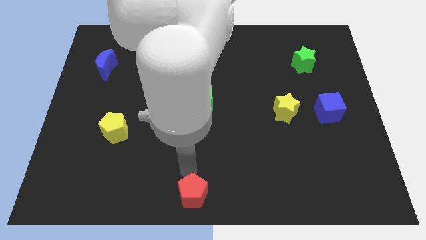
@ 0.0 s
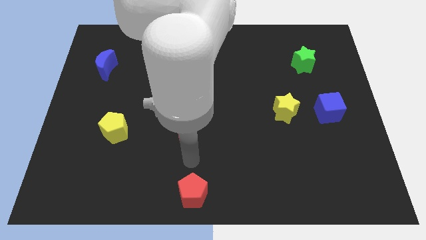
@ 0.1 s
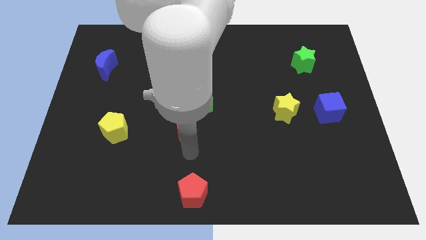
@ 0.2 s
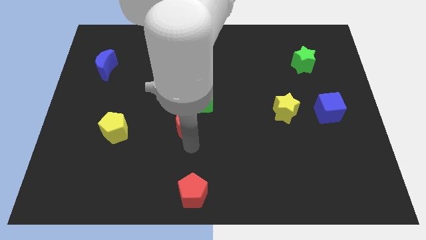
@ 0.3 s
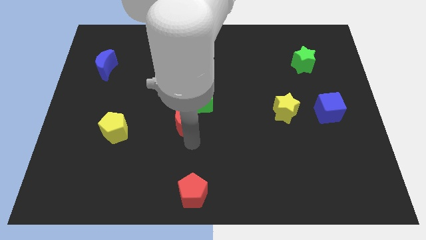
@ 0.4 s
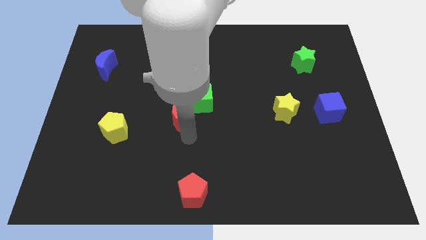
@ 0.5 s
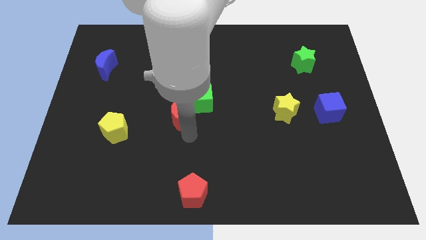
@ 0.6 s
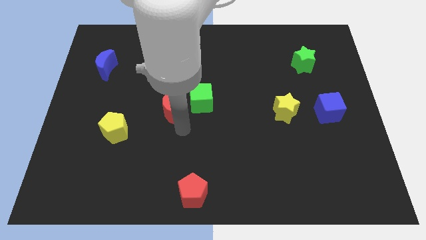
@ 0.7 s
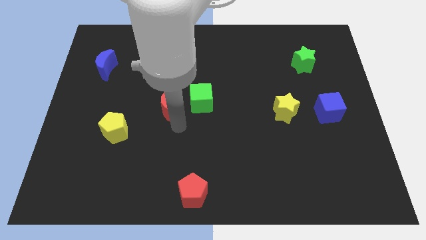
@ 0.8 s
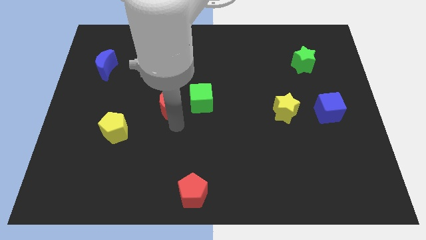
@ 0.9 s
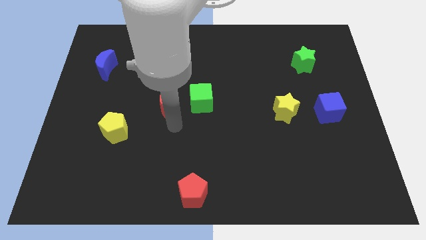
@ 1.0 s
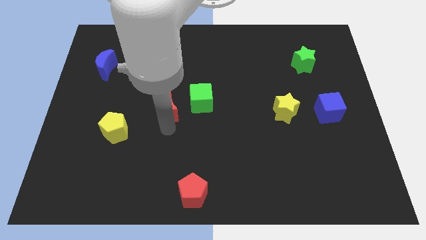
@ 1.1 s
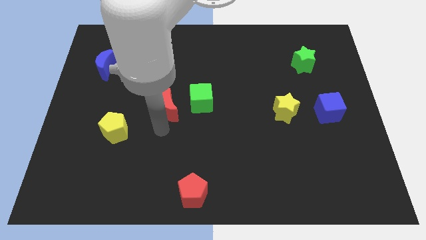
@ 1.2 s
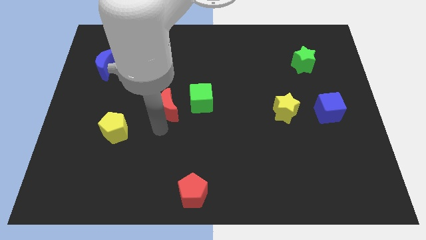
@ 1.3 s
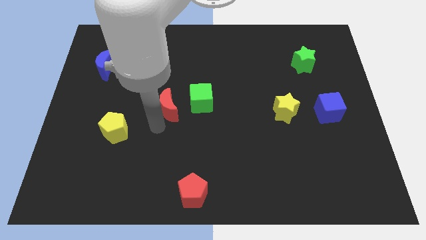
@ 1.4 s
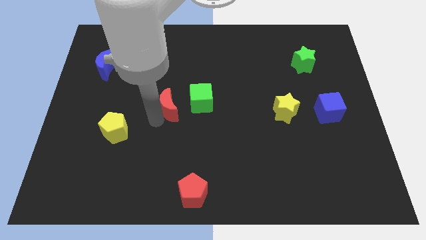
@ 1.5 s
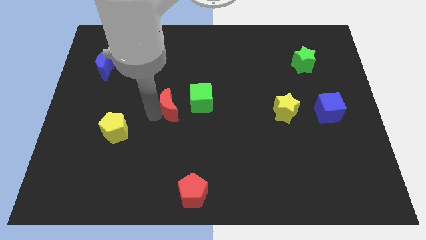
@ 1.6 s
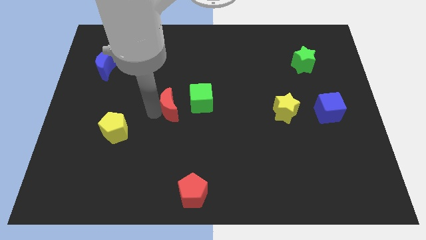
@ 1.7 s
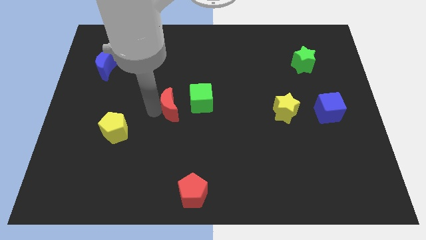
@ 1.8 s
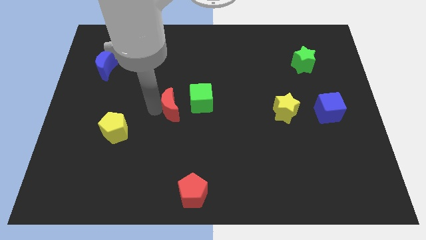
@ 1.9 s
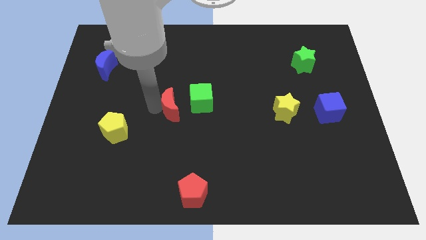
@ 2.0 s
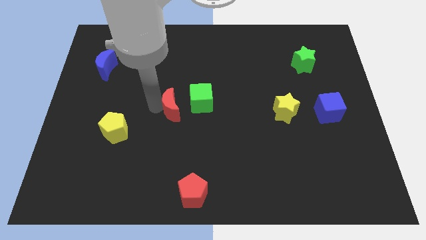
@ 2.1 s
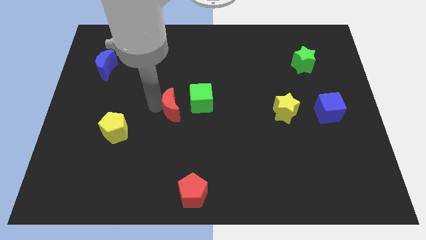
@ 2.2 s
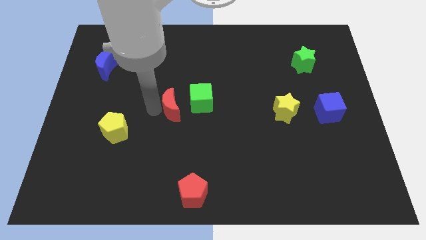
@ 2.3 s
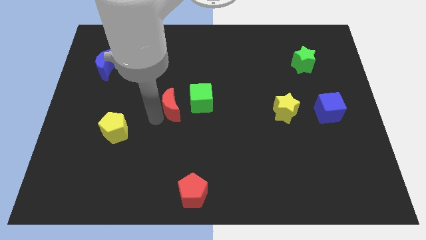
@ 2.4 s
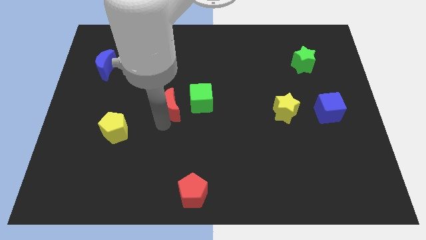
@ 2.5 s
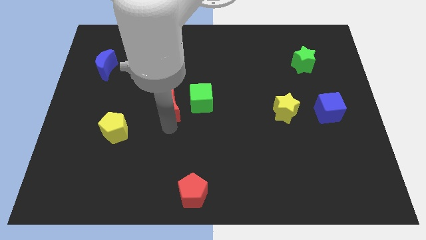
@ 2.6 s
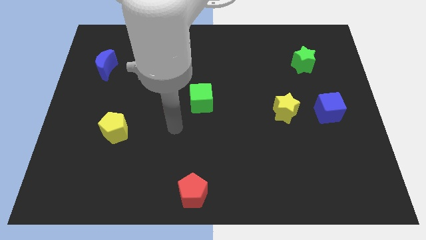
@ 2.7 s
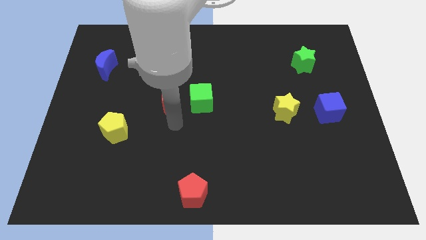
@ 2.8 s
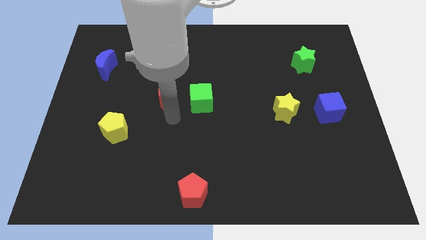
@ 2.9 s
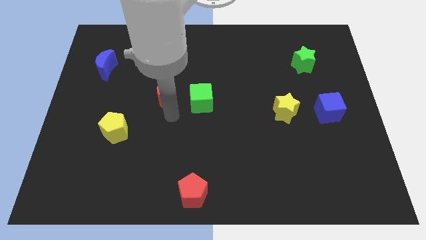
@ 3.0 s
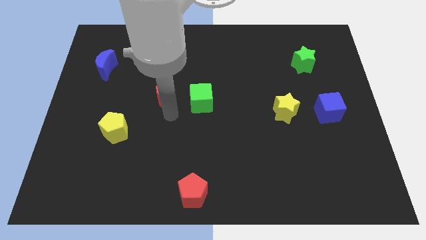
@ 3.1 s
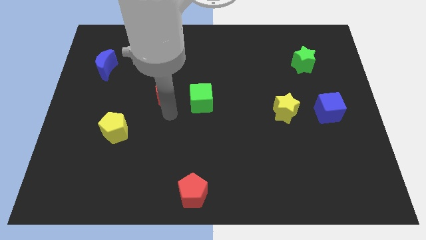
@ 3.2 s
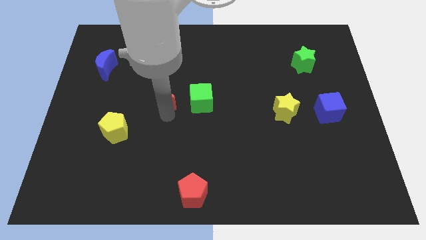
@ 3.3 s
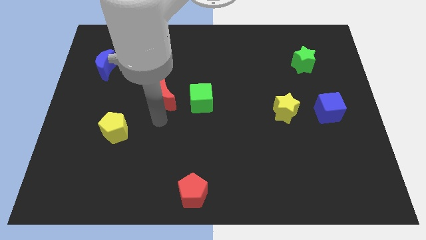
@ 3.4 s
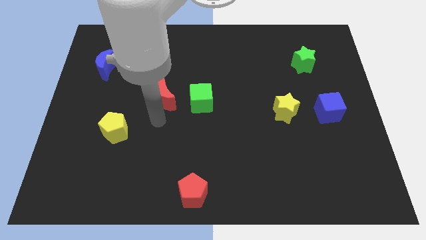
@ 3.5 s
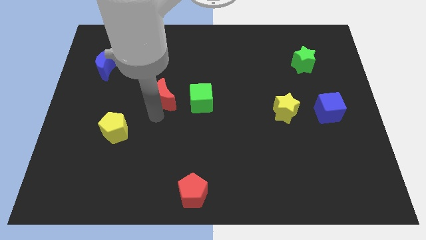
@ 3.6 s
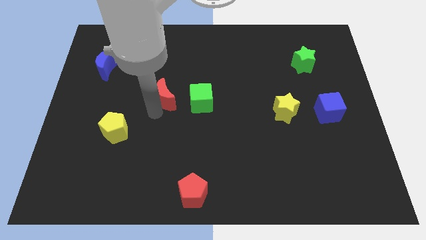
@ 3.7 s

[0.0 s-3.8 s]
place the red moon to the left side of green cube

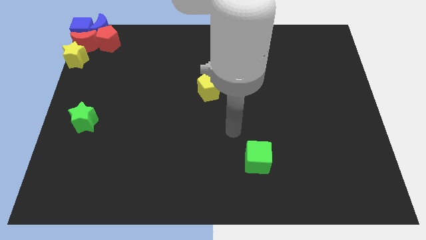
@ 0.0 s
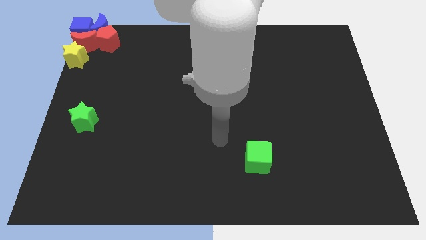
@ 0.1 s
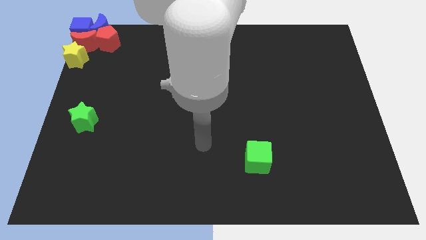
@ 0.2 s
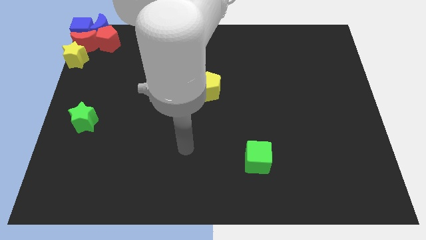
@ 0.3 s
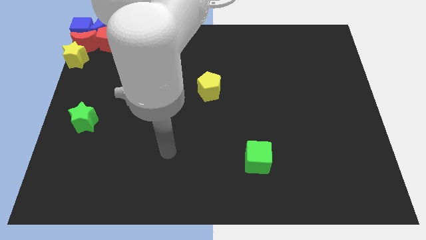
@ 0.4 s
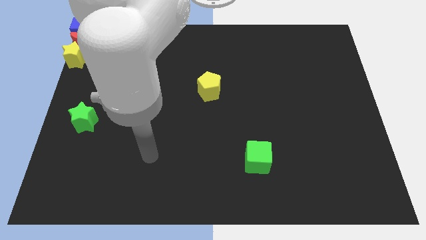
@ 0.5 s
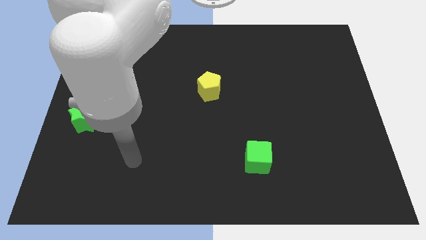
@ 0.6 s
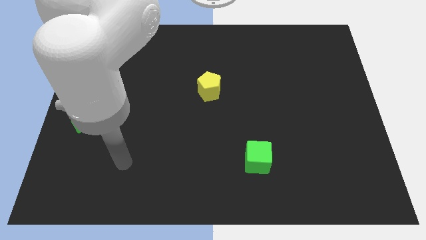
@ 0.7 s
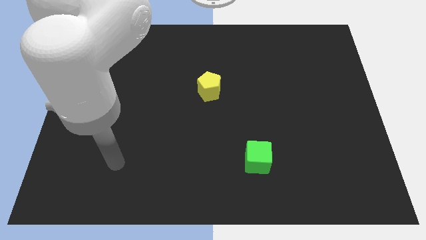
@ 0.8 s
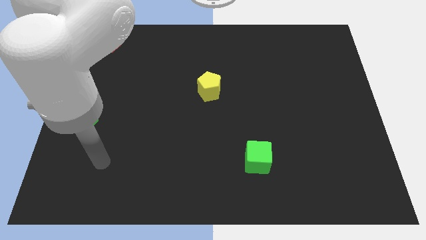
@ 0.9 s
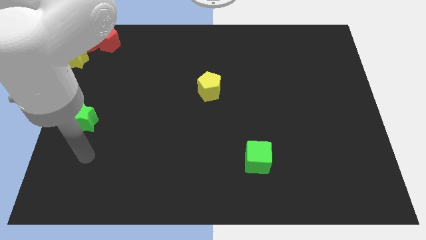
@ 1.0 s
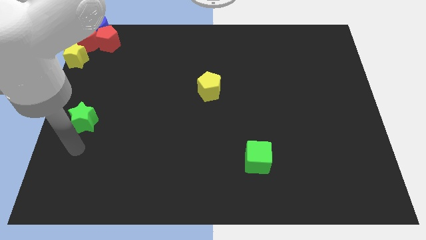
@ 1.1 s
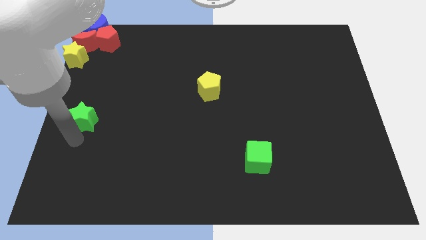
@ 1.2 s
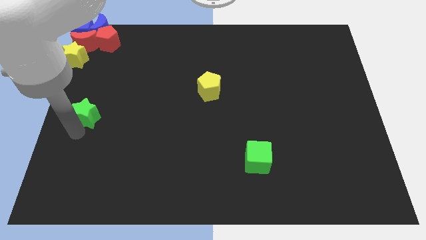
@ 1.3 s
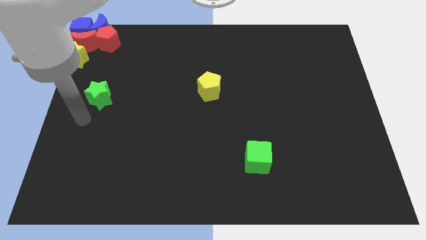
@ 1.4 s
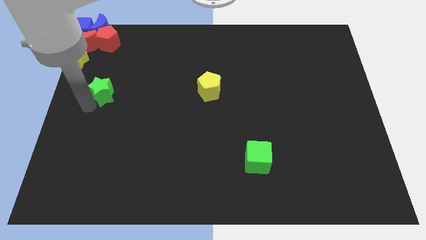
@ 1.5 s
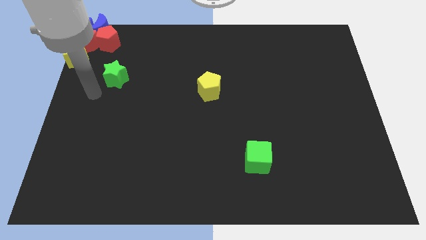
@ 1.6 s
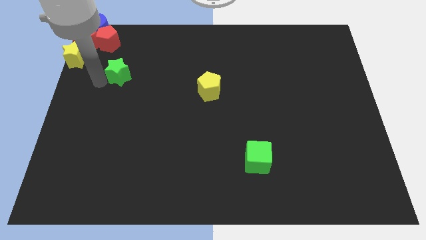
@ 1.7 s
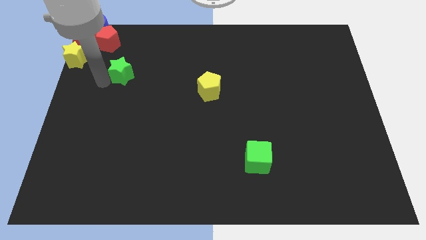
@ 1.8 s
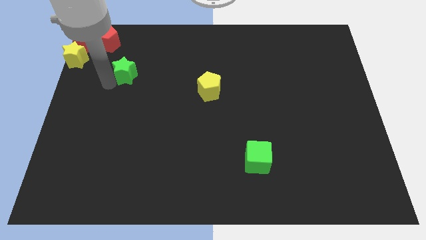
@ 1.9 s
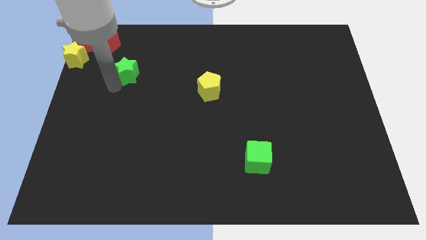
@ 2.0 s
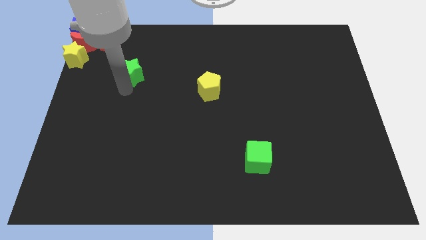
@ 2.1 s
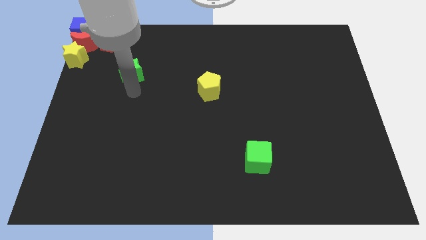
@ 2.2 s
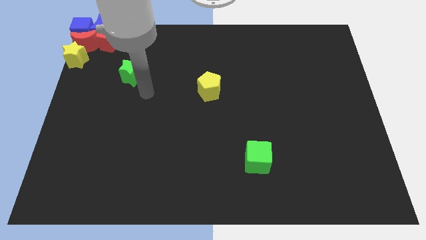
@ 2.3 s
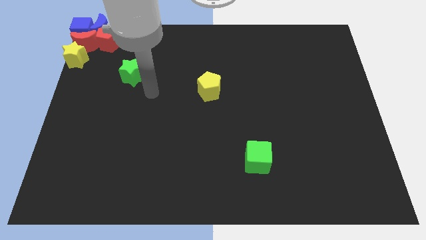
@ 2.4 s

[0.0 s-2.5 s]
place the green star diagonally in between the yellow star and the yellow pentagon

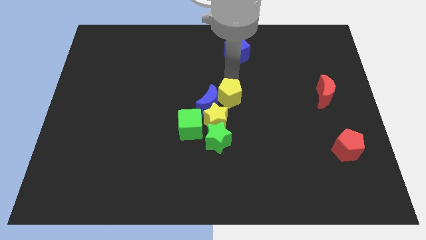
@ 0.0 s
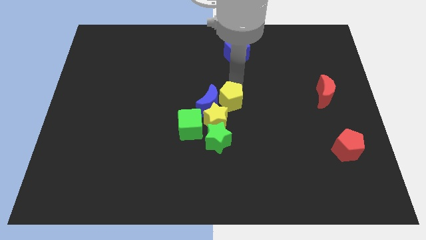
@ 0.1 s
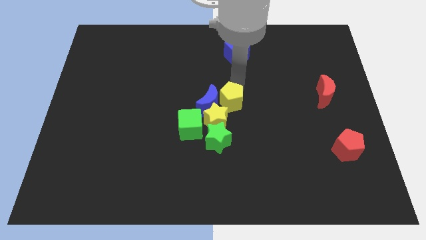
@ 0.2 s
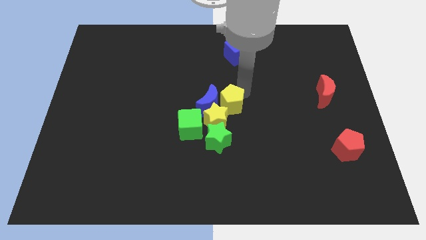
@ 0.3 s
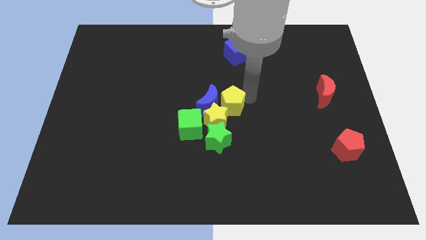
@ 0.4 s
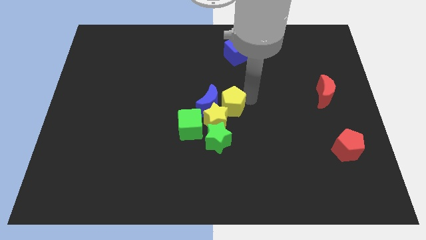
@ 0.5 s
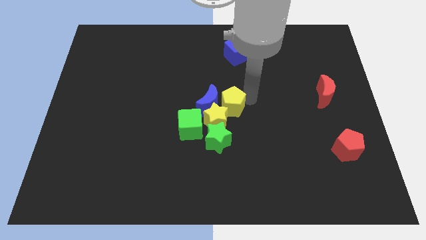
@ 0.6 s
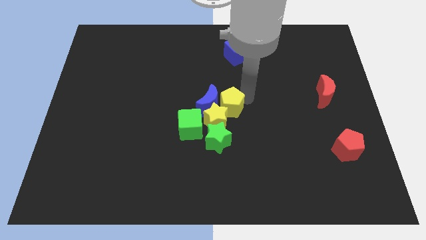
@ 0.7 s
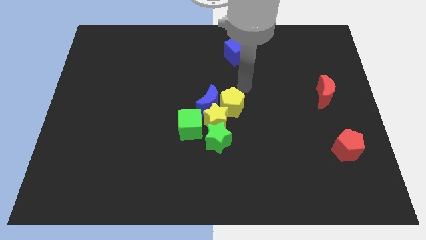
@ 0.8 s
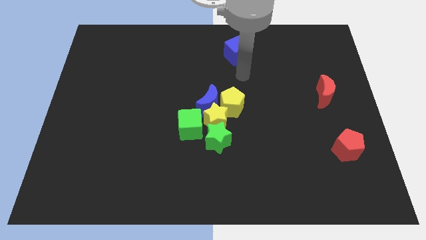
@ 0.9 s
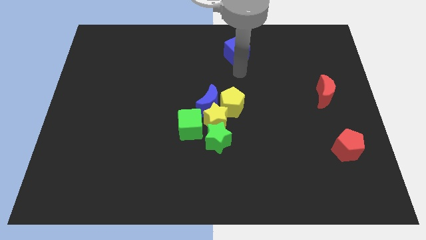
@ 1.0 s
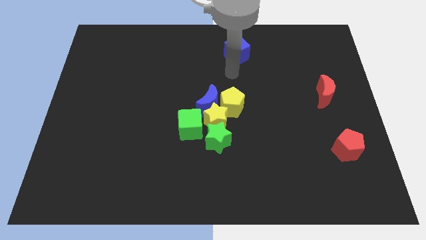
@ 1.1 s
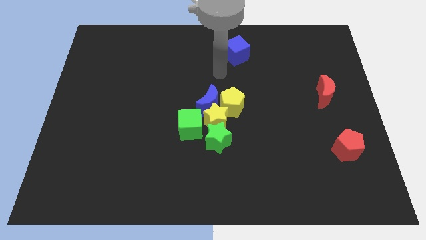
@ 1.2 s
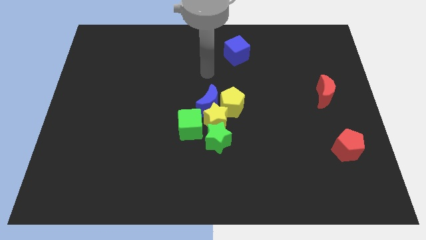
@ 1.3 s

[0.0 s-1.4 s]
move the yellow pentagon diagonally right to the yellow star

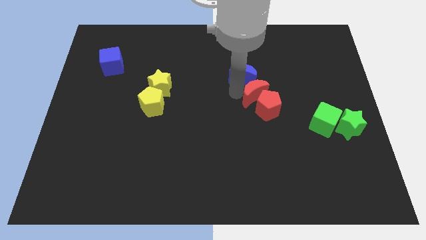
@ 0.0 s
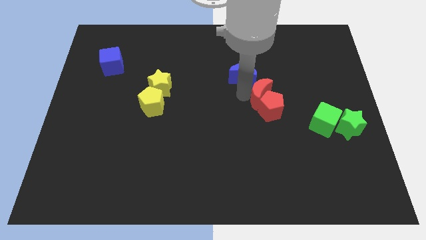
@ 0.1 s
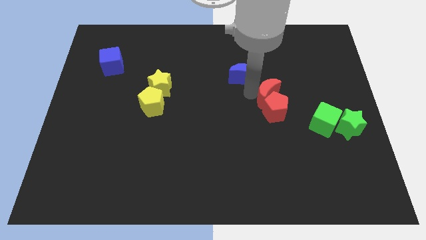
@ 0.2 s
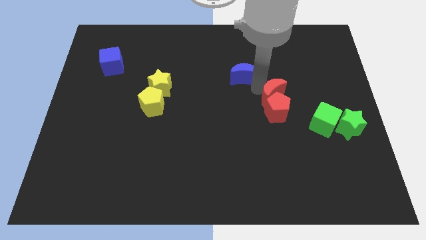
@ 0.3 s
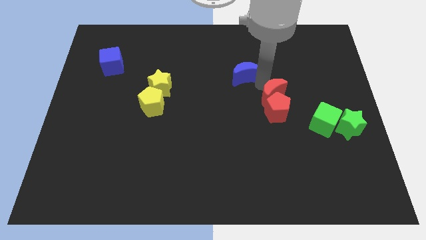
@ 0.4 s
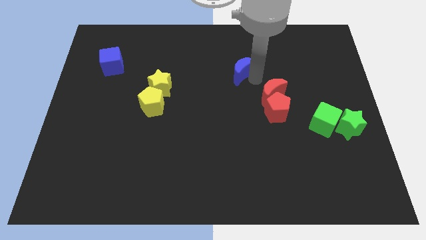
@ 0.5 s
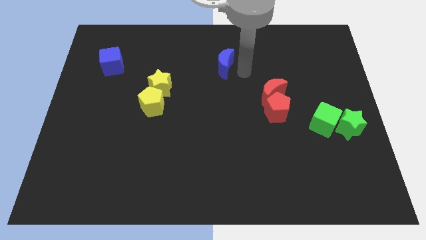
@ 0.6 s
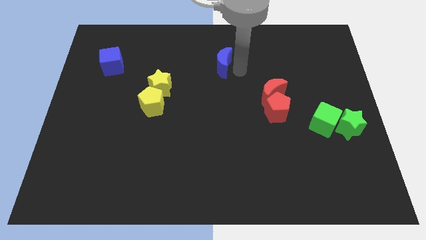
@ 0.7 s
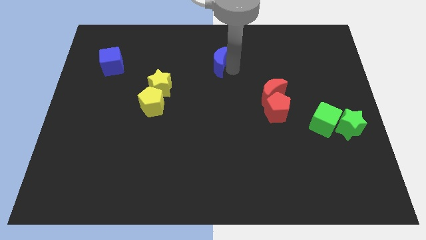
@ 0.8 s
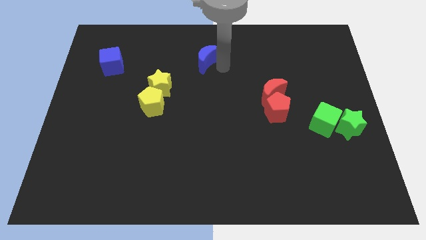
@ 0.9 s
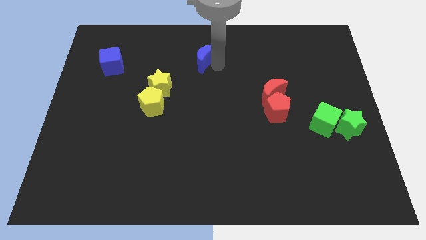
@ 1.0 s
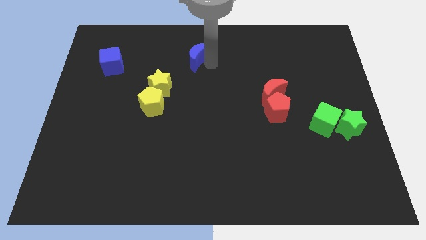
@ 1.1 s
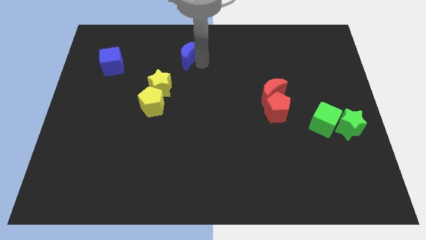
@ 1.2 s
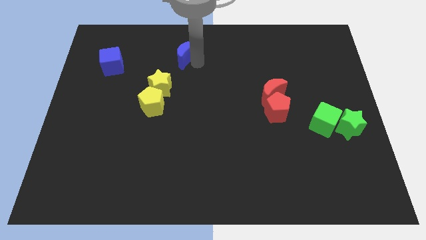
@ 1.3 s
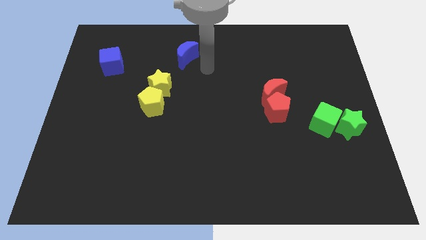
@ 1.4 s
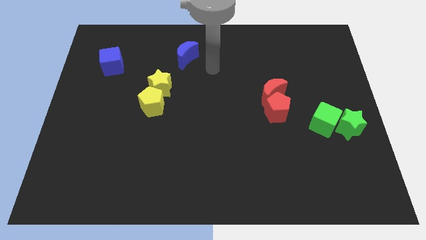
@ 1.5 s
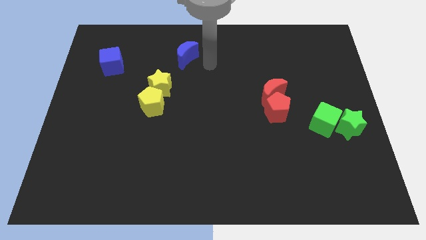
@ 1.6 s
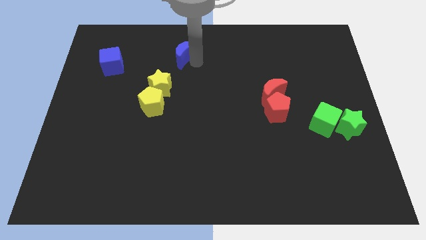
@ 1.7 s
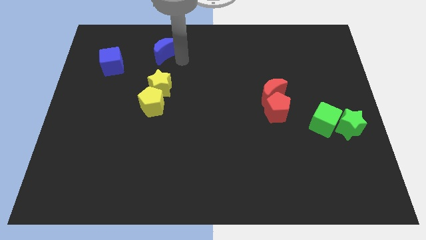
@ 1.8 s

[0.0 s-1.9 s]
separate the blue moon from red moon
